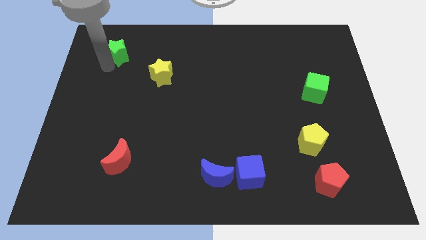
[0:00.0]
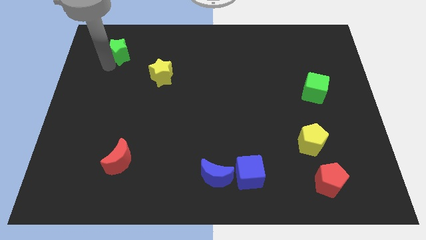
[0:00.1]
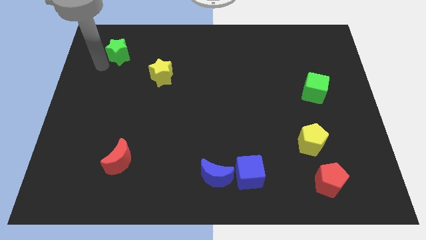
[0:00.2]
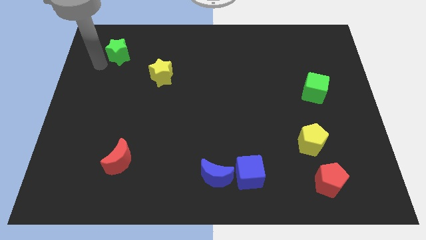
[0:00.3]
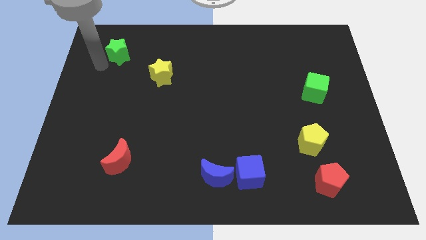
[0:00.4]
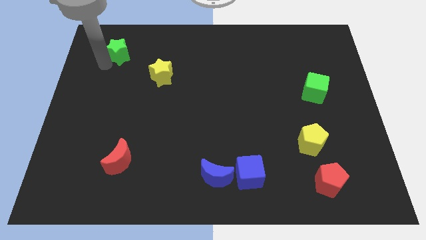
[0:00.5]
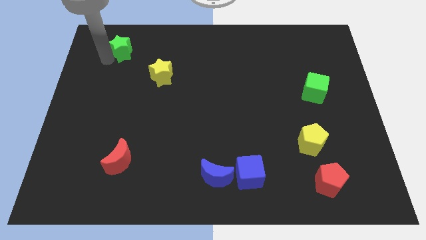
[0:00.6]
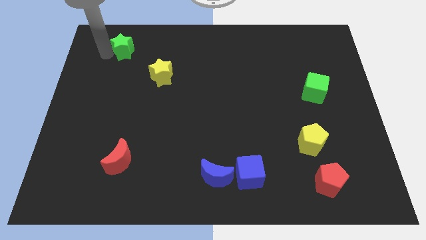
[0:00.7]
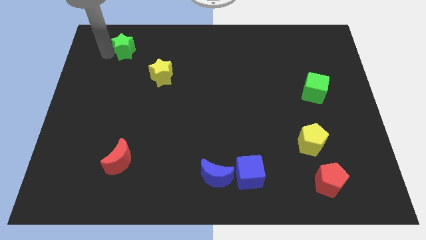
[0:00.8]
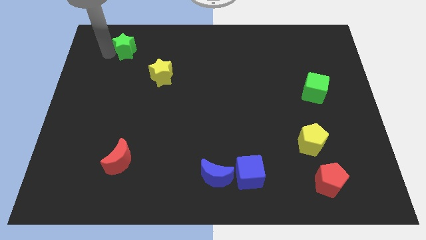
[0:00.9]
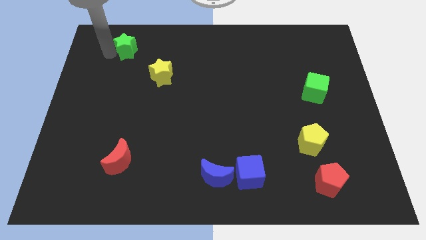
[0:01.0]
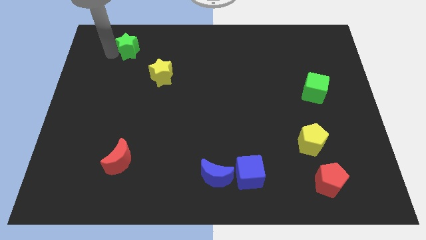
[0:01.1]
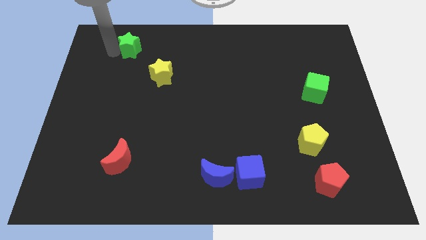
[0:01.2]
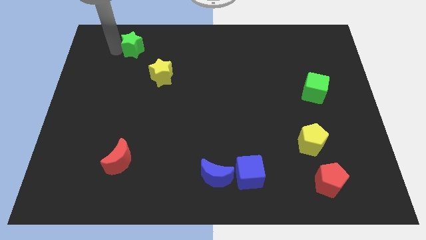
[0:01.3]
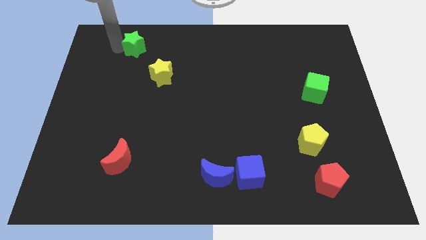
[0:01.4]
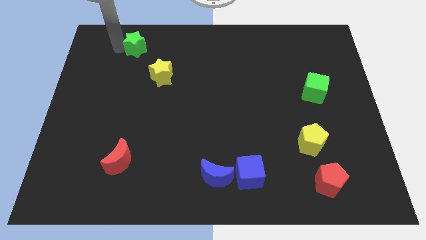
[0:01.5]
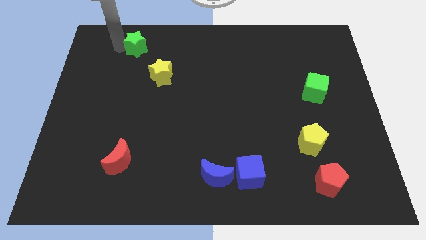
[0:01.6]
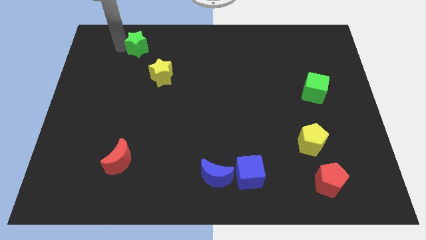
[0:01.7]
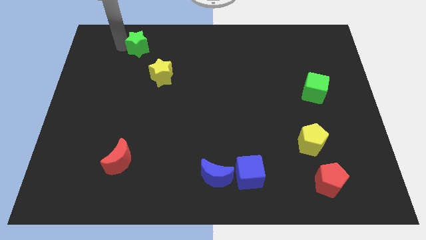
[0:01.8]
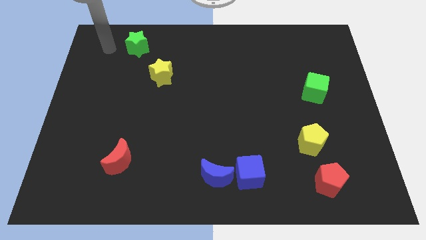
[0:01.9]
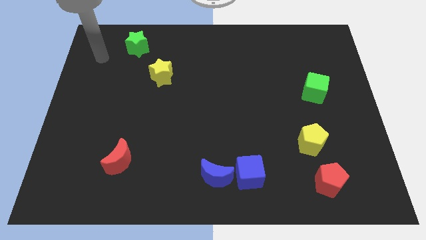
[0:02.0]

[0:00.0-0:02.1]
move the green star diagonally above the yellow star

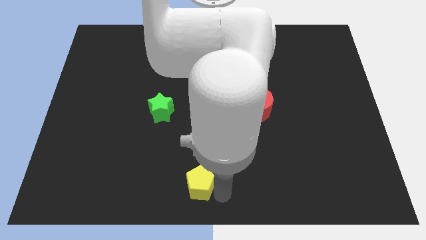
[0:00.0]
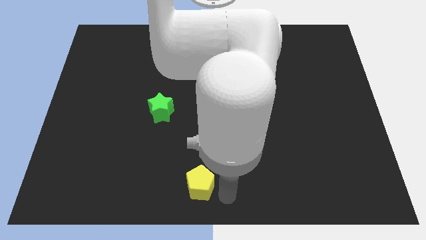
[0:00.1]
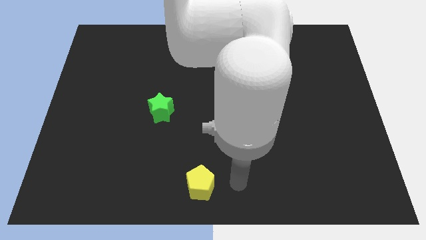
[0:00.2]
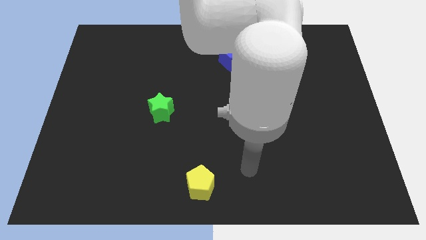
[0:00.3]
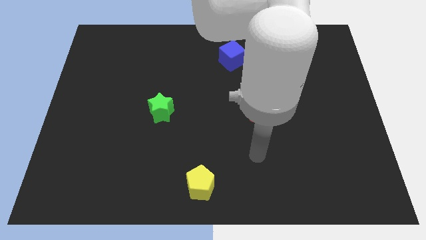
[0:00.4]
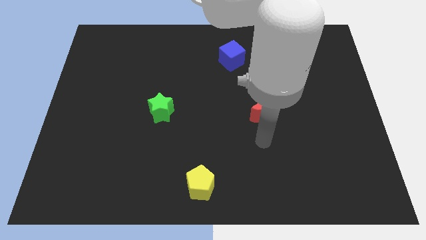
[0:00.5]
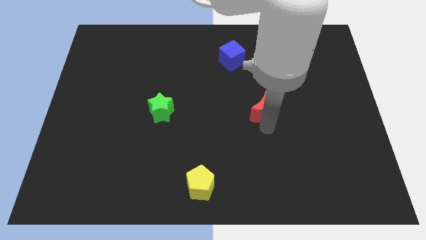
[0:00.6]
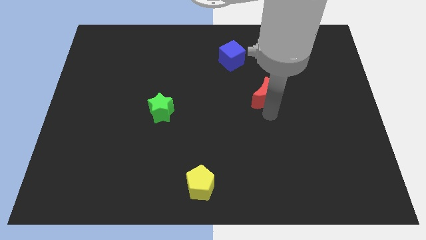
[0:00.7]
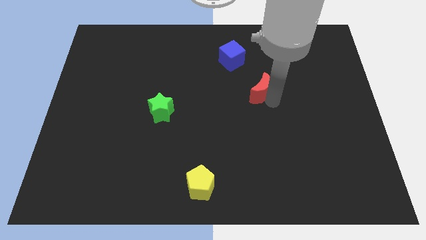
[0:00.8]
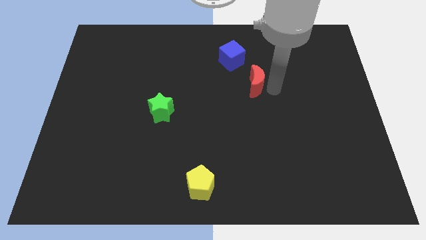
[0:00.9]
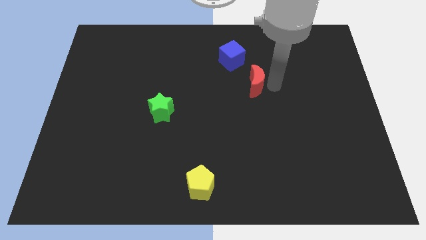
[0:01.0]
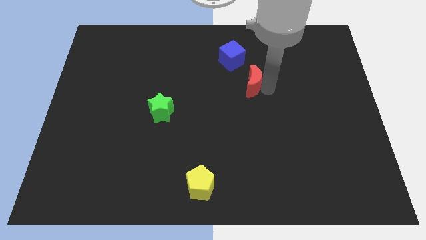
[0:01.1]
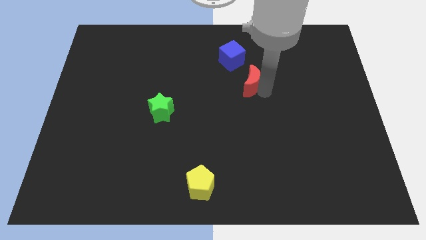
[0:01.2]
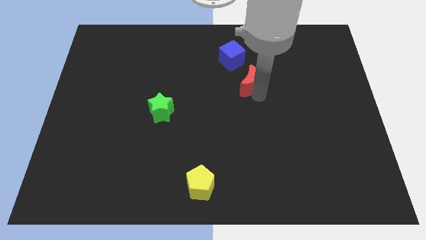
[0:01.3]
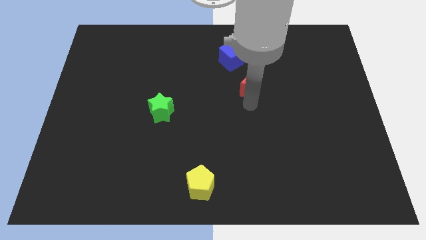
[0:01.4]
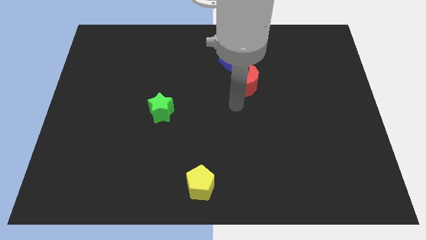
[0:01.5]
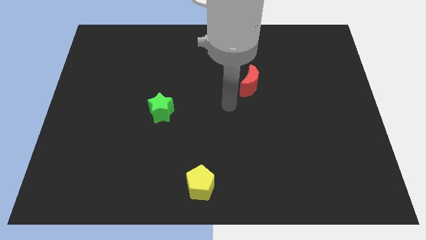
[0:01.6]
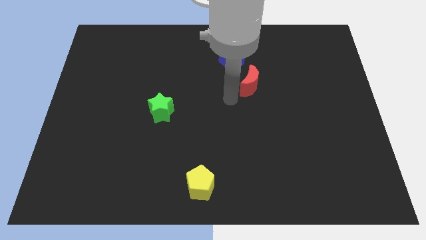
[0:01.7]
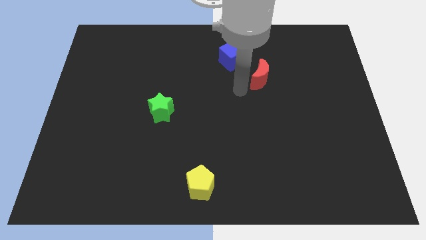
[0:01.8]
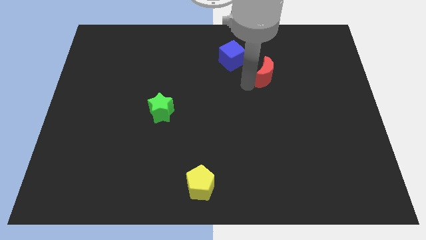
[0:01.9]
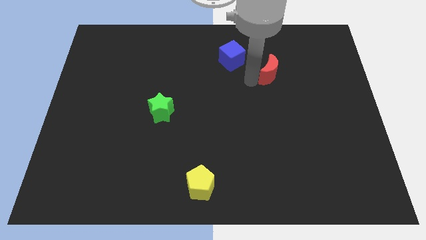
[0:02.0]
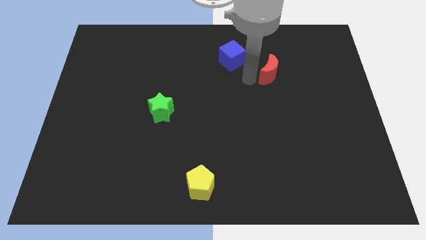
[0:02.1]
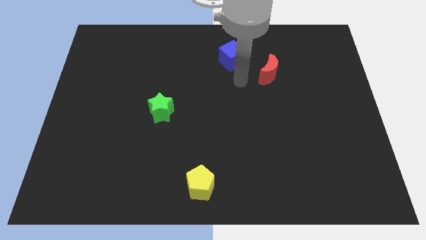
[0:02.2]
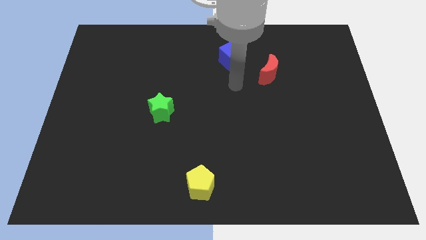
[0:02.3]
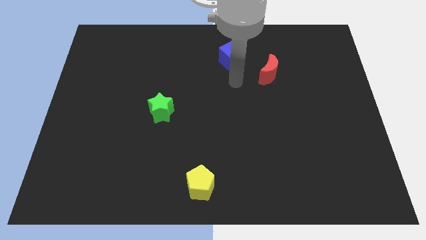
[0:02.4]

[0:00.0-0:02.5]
push the red crescent to the bottom right side of the blue cube

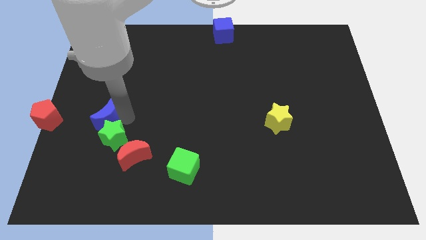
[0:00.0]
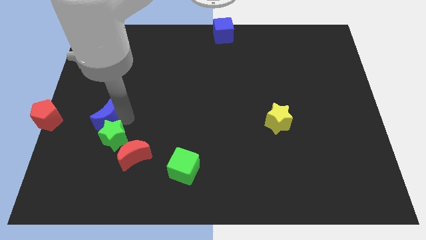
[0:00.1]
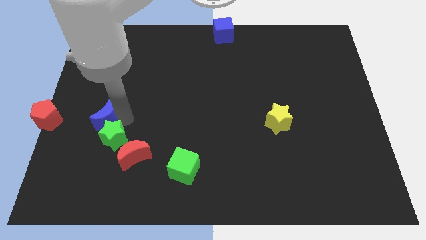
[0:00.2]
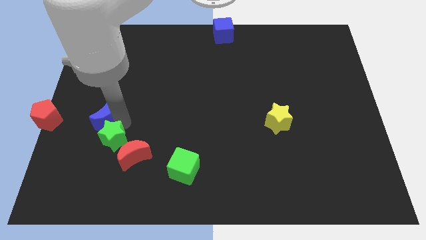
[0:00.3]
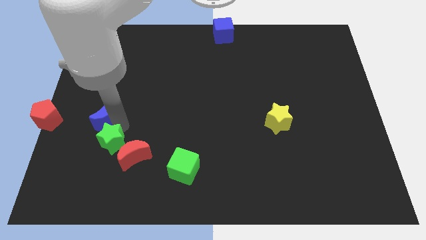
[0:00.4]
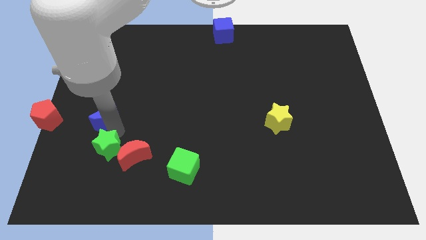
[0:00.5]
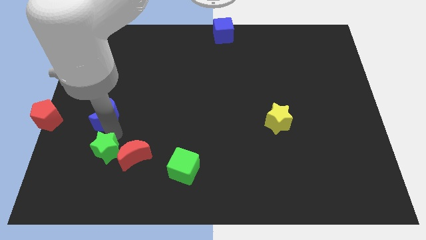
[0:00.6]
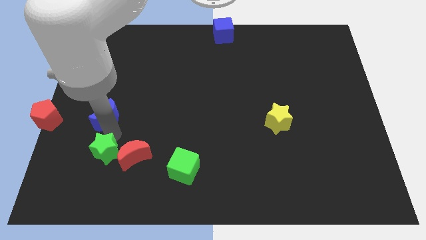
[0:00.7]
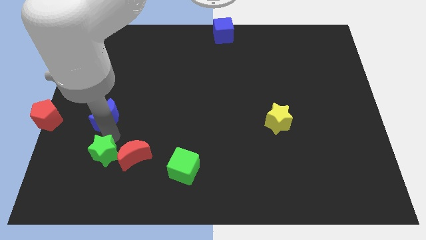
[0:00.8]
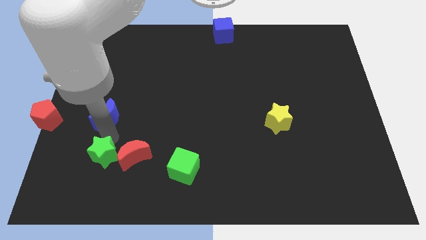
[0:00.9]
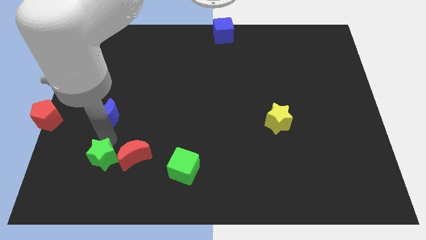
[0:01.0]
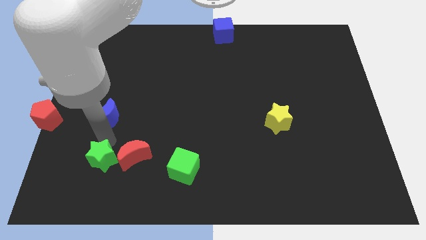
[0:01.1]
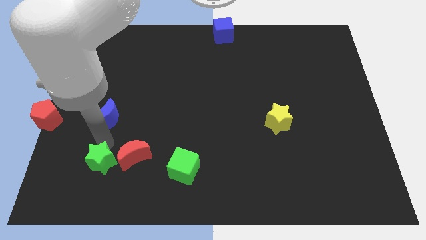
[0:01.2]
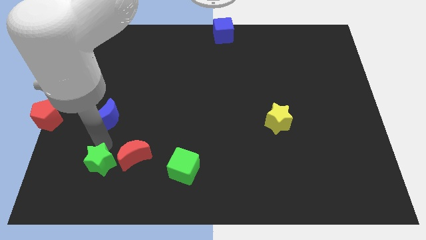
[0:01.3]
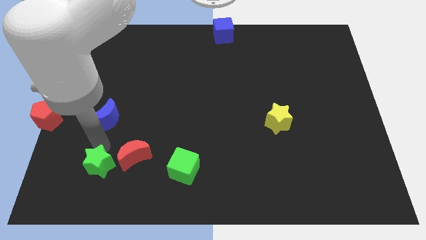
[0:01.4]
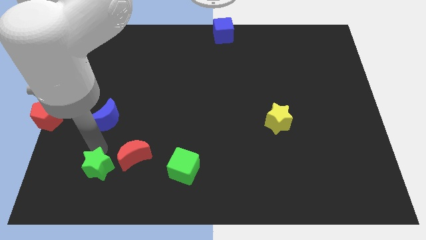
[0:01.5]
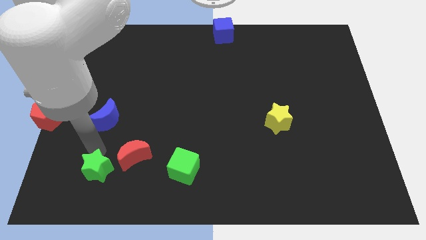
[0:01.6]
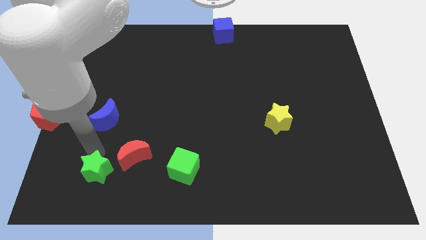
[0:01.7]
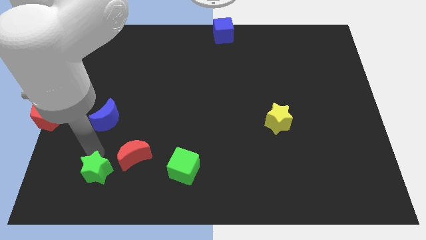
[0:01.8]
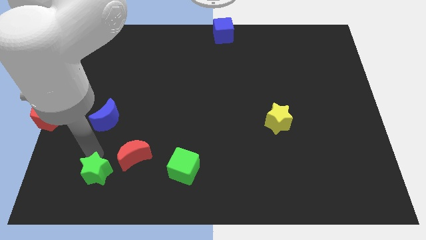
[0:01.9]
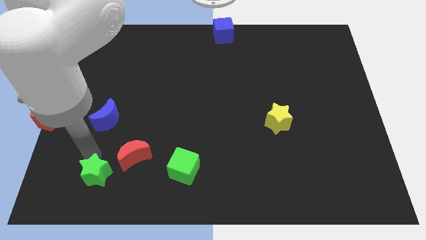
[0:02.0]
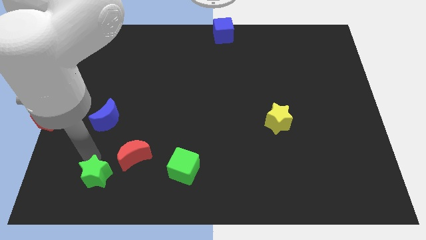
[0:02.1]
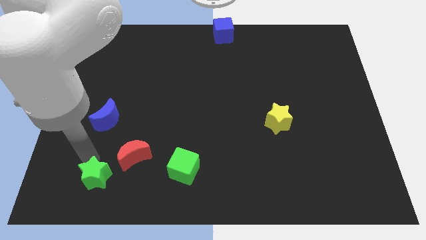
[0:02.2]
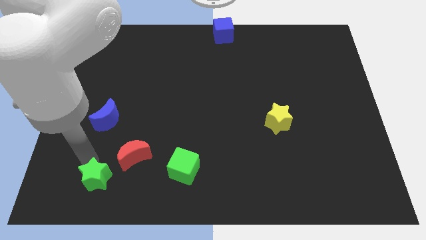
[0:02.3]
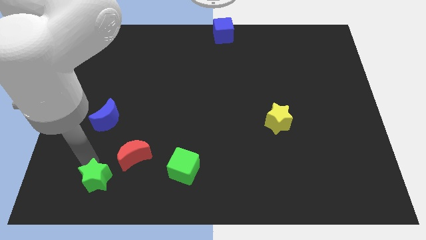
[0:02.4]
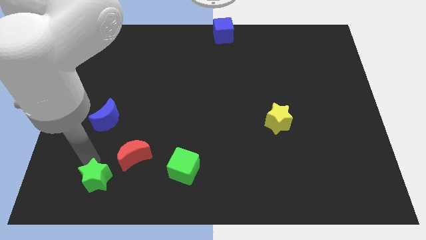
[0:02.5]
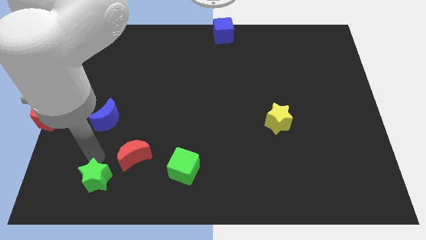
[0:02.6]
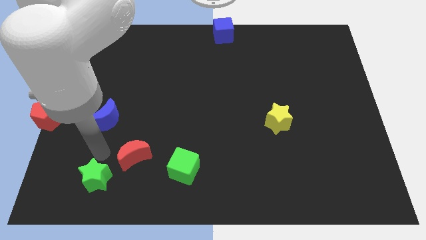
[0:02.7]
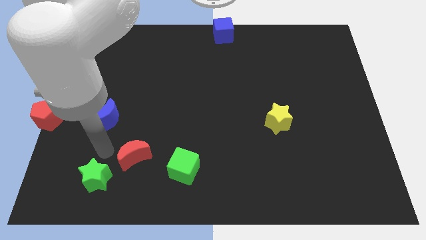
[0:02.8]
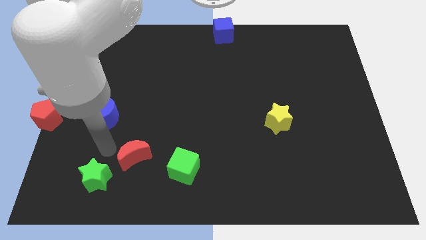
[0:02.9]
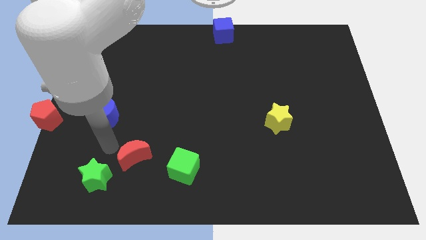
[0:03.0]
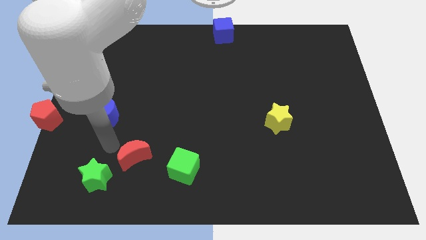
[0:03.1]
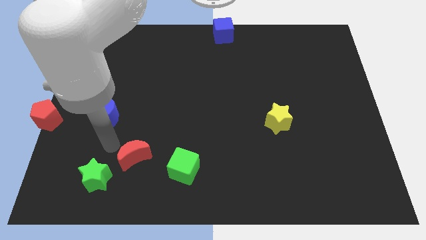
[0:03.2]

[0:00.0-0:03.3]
separate the green star from the blue crescent

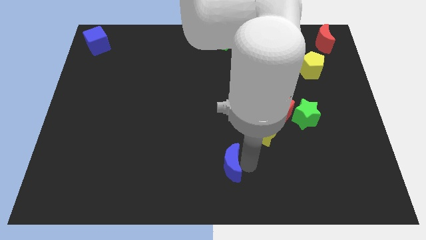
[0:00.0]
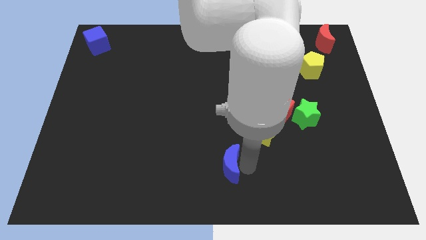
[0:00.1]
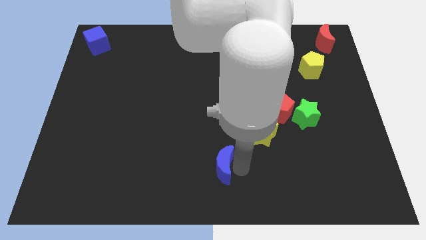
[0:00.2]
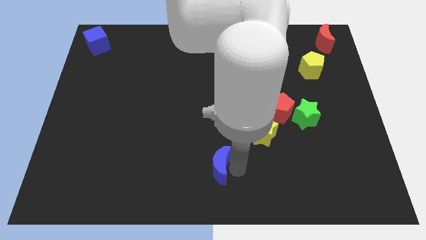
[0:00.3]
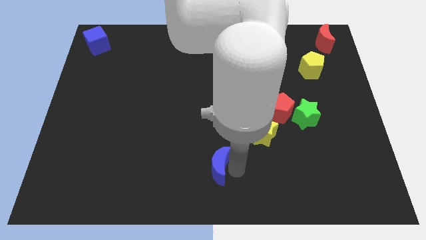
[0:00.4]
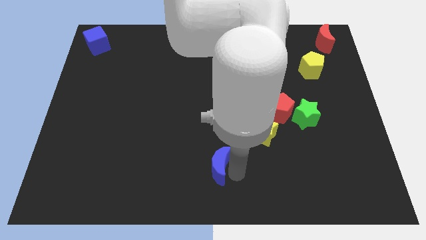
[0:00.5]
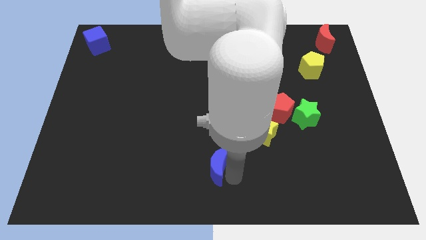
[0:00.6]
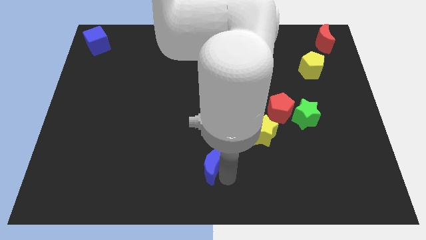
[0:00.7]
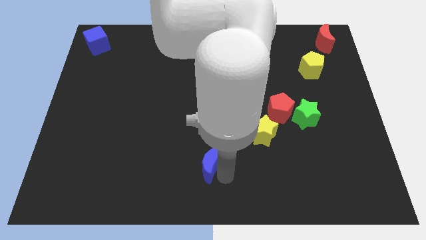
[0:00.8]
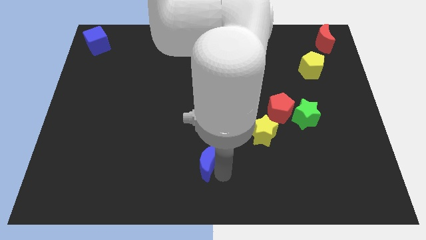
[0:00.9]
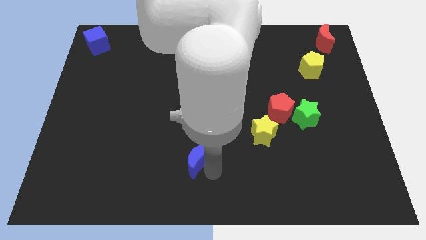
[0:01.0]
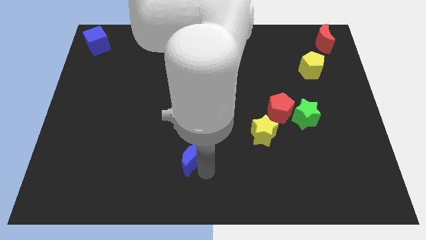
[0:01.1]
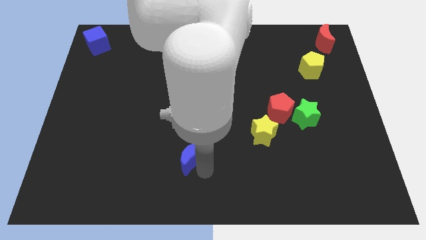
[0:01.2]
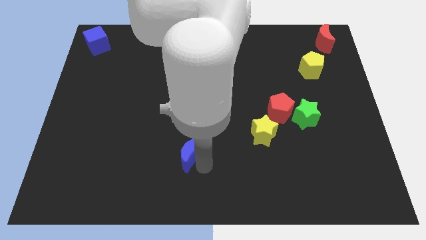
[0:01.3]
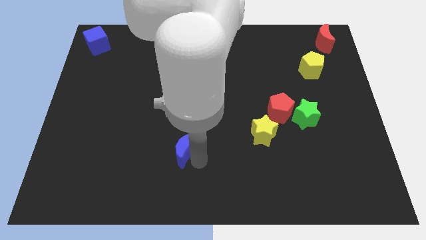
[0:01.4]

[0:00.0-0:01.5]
push the blue moon slightly to the left side of the board
